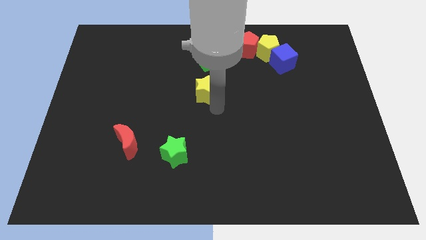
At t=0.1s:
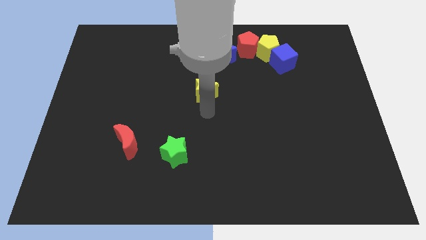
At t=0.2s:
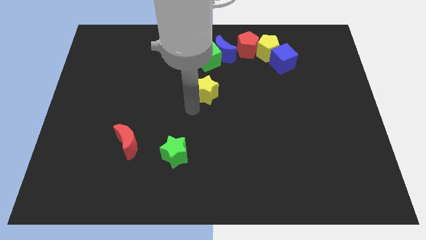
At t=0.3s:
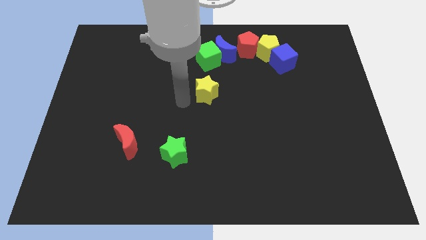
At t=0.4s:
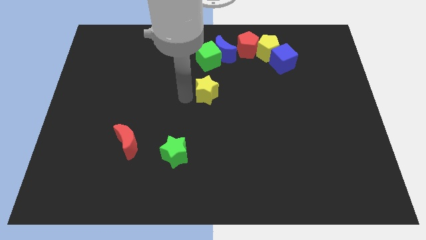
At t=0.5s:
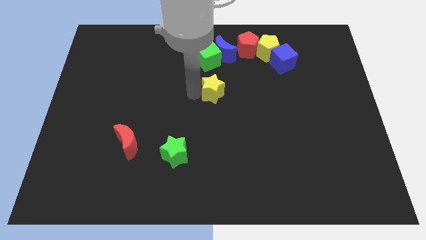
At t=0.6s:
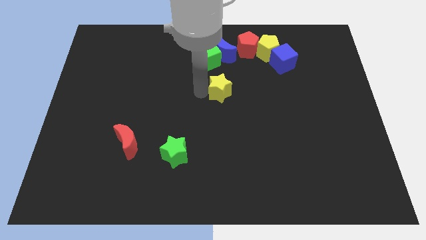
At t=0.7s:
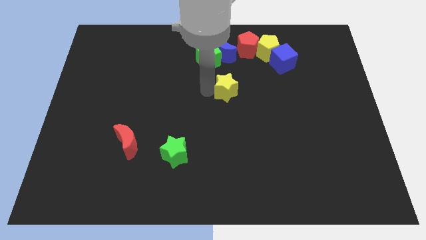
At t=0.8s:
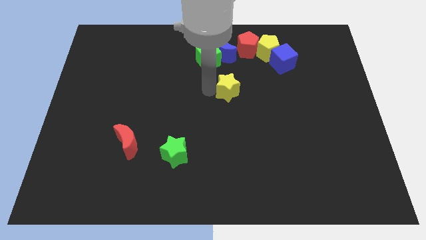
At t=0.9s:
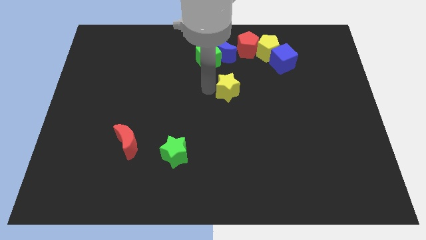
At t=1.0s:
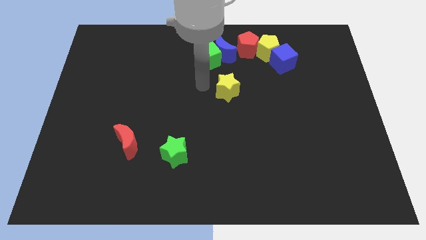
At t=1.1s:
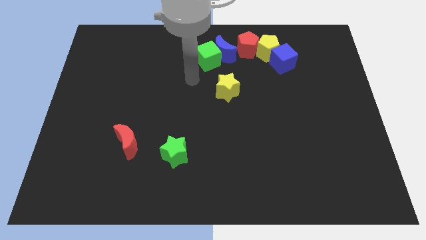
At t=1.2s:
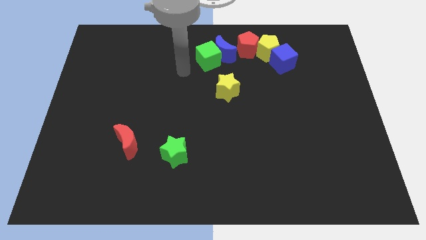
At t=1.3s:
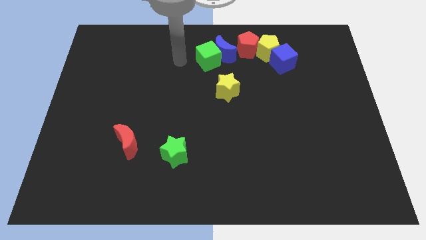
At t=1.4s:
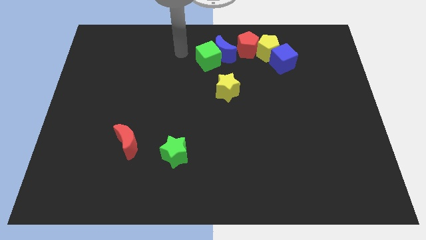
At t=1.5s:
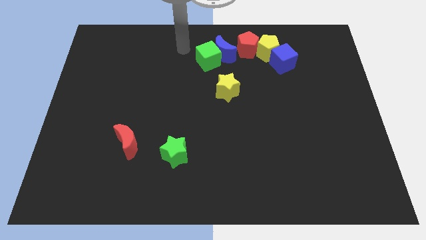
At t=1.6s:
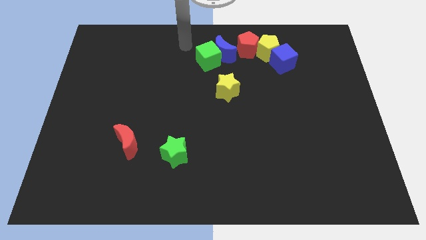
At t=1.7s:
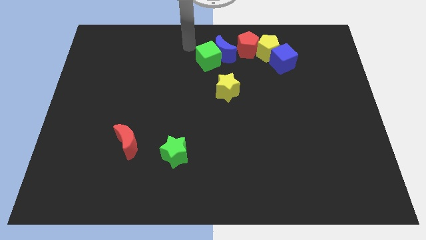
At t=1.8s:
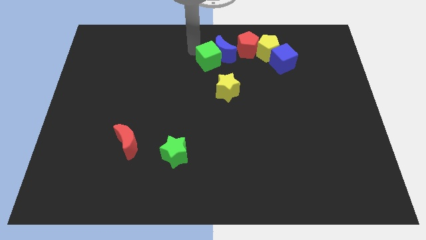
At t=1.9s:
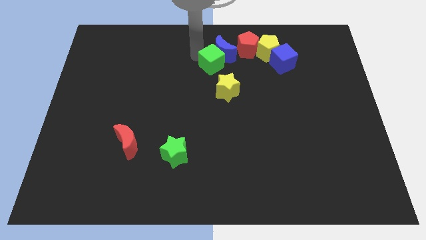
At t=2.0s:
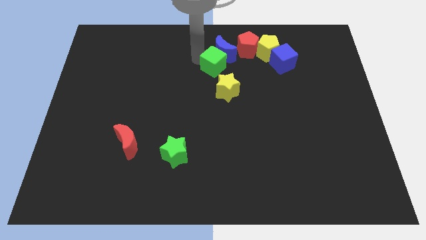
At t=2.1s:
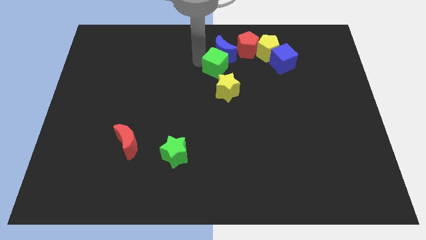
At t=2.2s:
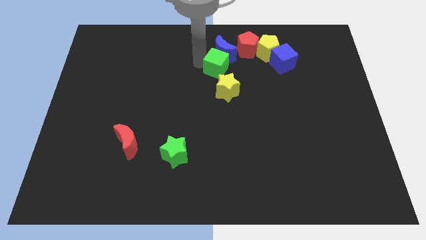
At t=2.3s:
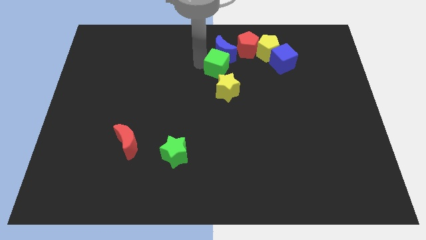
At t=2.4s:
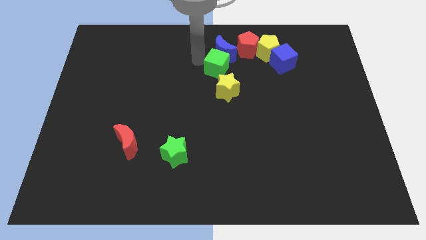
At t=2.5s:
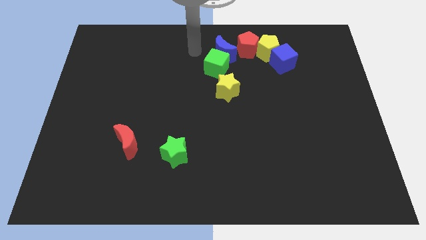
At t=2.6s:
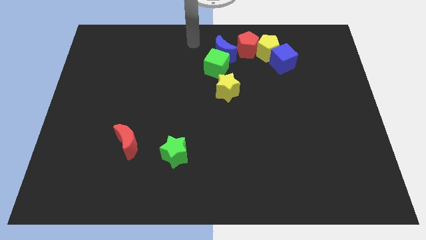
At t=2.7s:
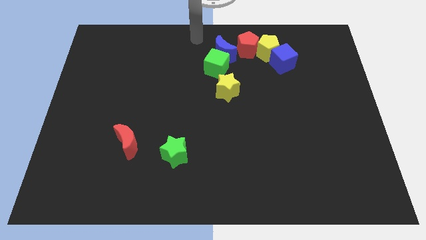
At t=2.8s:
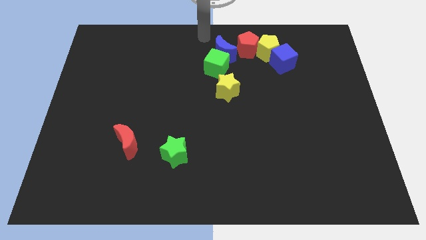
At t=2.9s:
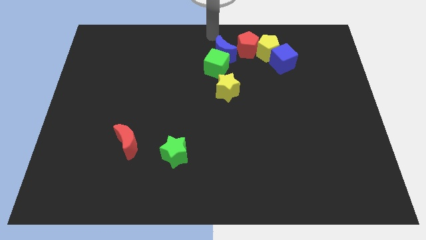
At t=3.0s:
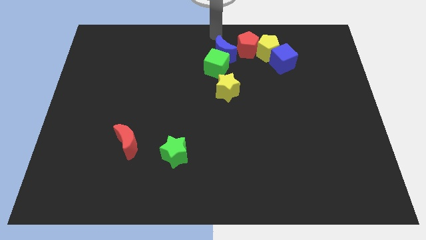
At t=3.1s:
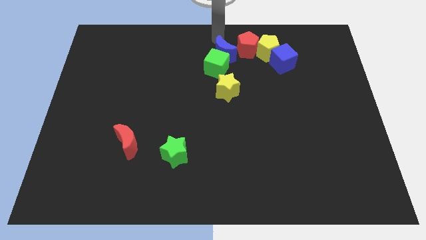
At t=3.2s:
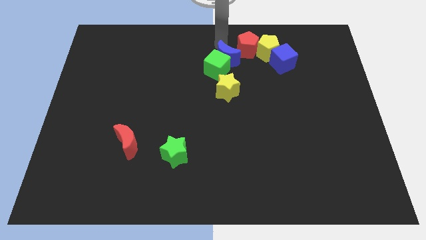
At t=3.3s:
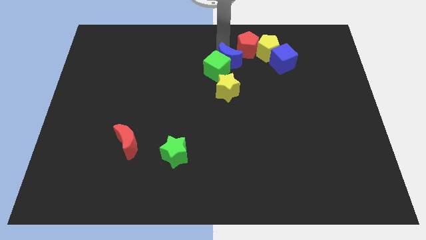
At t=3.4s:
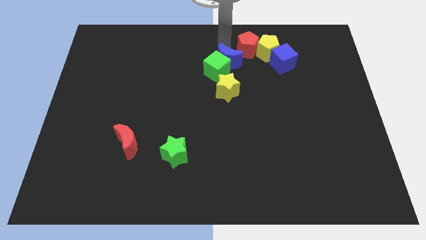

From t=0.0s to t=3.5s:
attach the green cube to the yellow star

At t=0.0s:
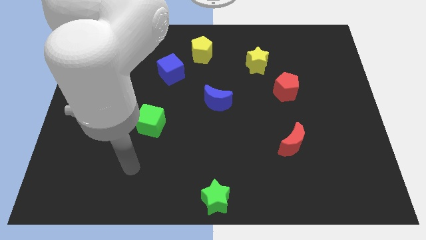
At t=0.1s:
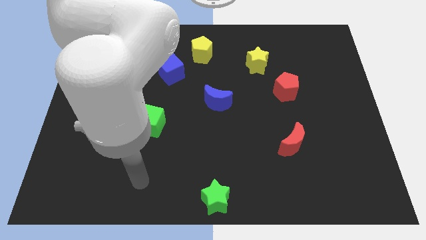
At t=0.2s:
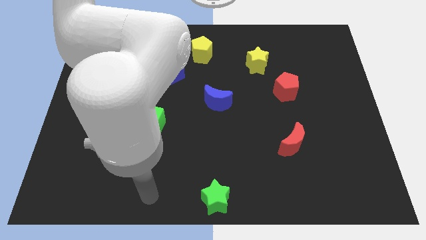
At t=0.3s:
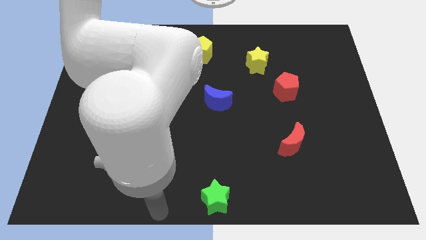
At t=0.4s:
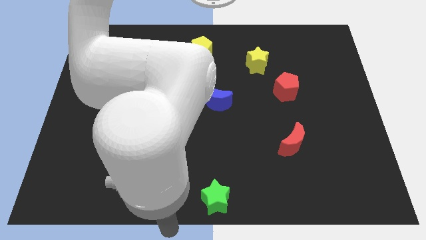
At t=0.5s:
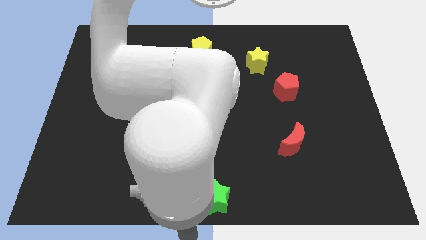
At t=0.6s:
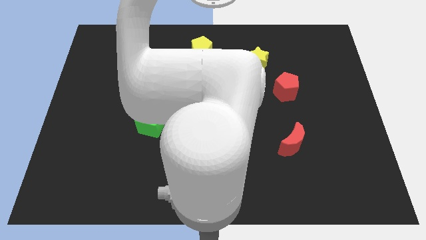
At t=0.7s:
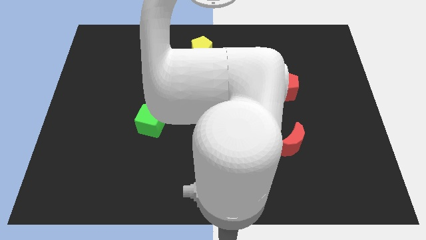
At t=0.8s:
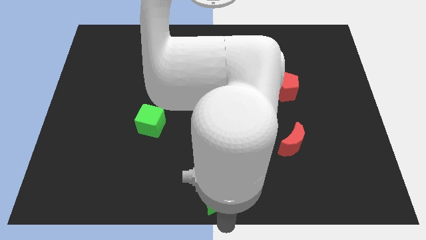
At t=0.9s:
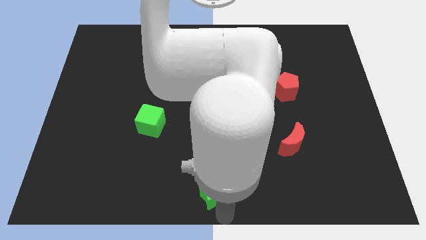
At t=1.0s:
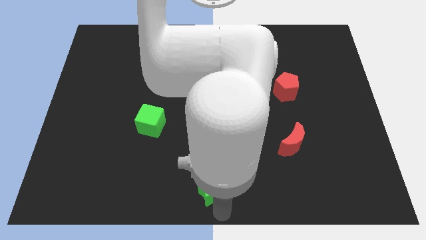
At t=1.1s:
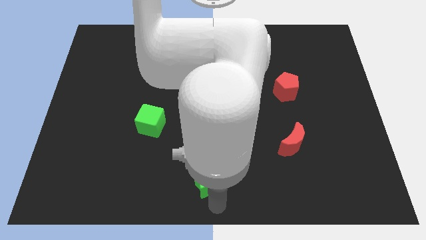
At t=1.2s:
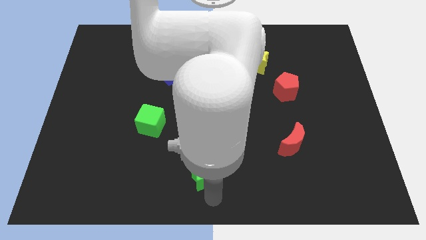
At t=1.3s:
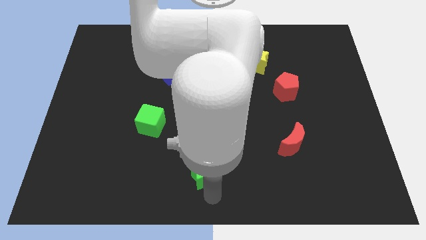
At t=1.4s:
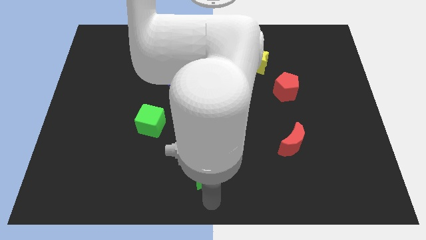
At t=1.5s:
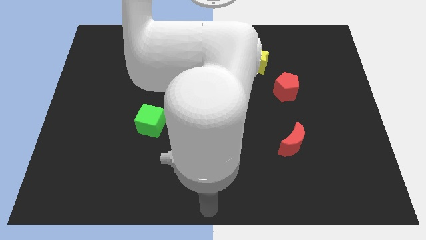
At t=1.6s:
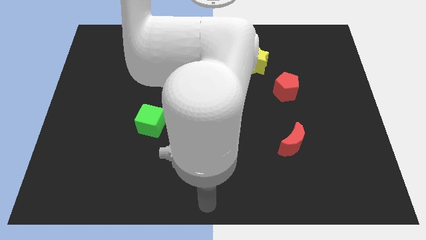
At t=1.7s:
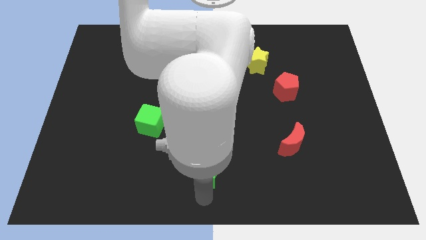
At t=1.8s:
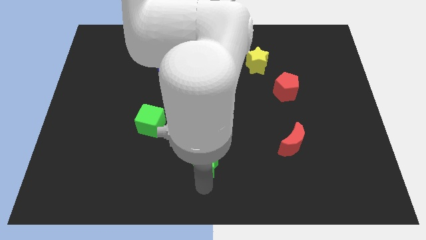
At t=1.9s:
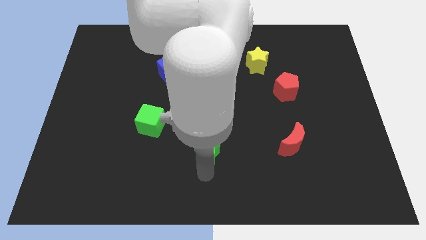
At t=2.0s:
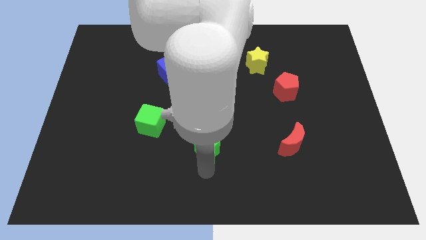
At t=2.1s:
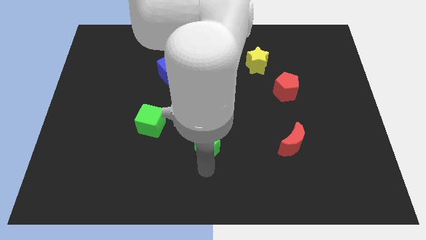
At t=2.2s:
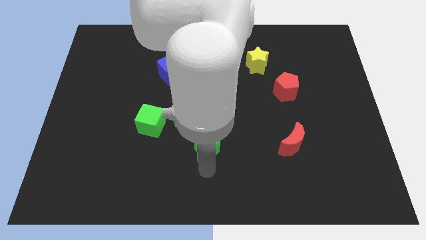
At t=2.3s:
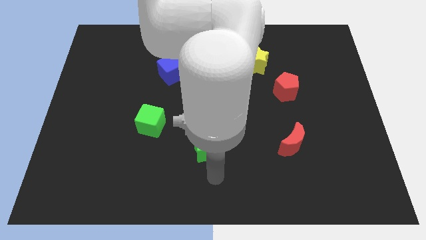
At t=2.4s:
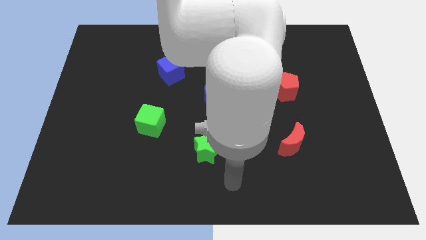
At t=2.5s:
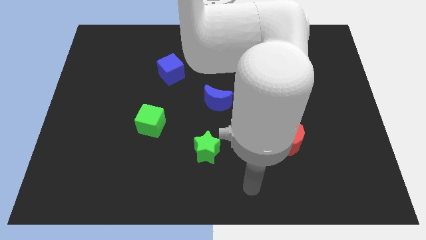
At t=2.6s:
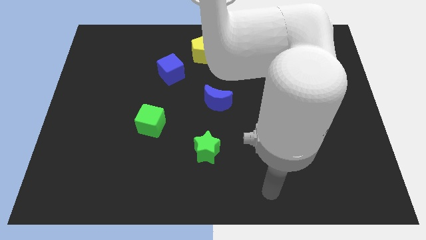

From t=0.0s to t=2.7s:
slightly move the green star towards the top

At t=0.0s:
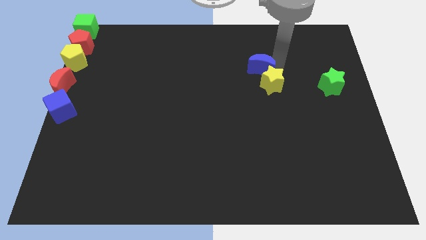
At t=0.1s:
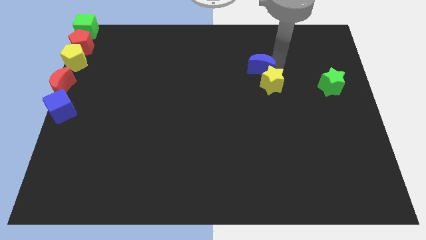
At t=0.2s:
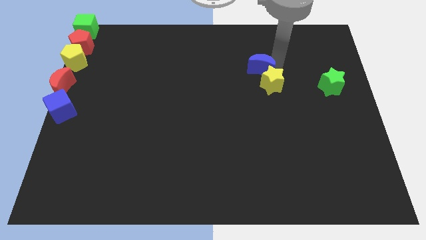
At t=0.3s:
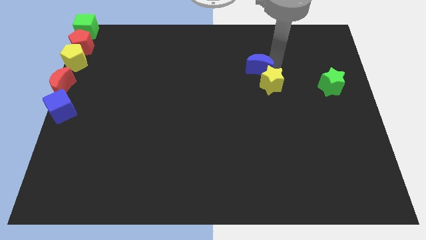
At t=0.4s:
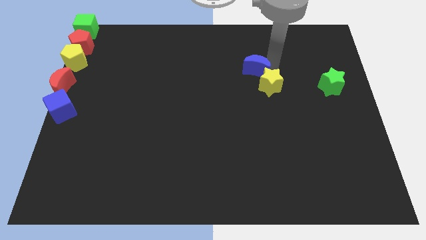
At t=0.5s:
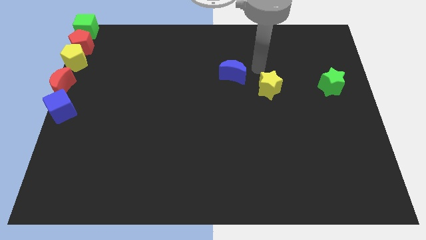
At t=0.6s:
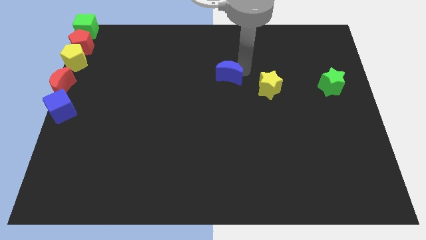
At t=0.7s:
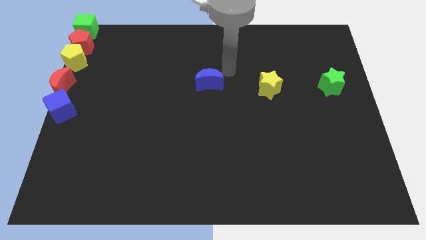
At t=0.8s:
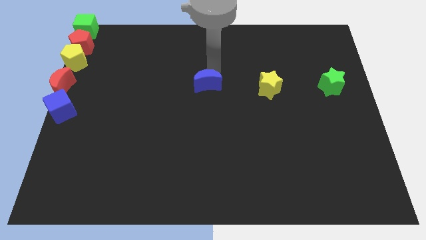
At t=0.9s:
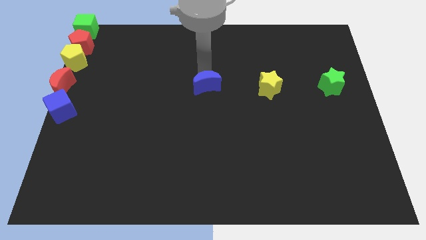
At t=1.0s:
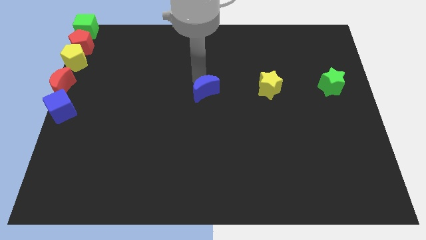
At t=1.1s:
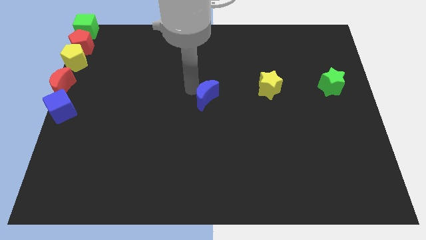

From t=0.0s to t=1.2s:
place the blue moon parallel to the left of yellow star

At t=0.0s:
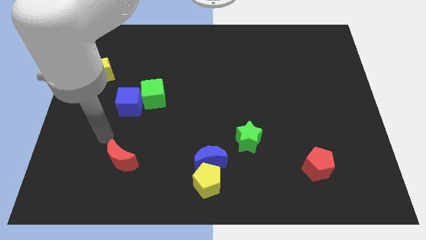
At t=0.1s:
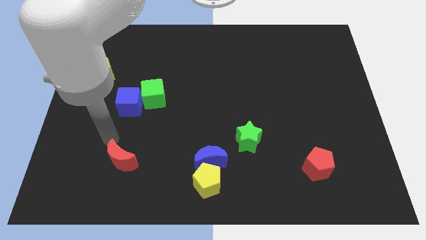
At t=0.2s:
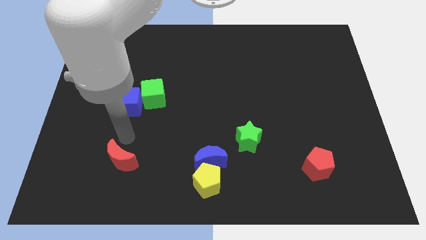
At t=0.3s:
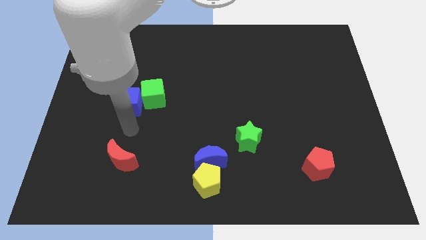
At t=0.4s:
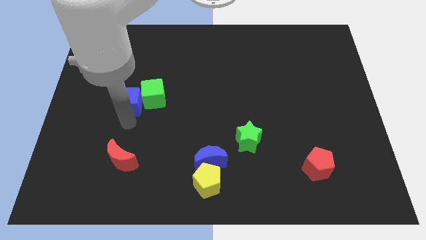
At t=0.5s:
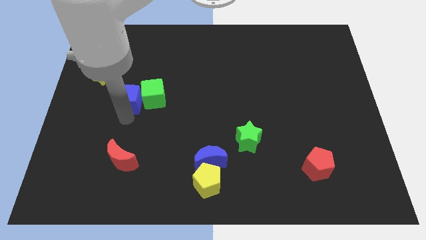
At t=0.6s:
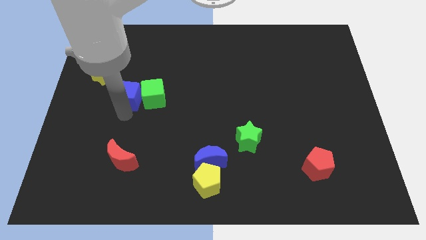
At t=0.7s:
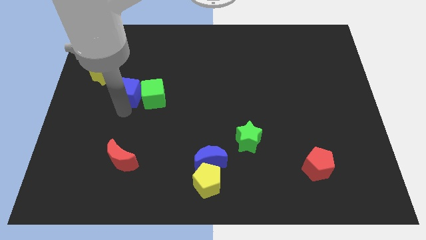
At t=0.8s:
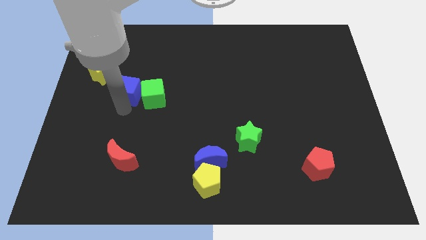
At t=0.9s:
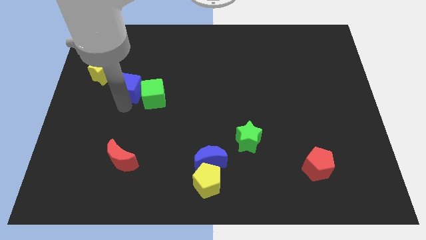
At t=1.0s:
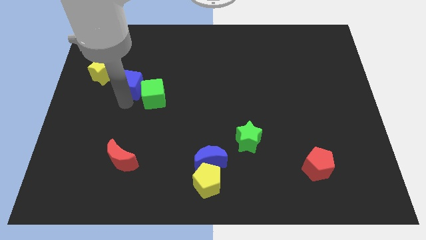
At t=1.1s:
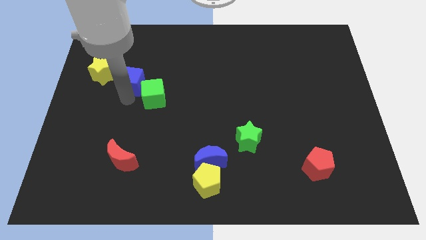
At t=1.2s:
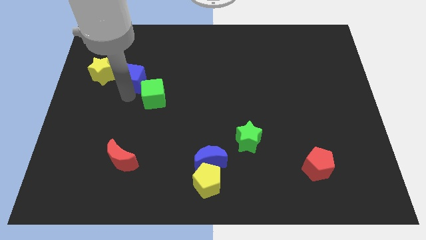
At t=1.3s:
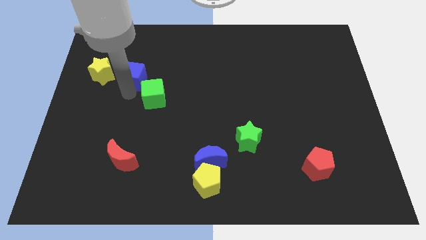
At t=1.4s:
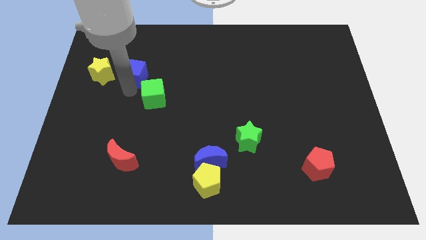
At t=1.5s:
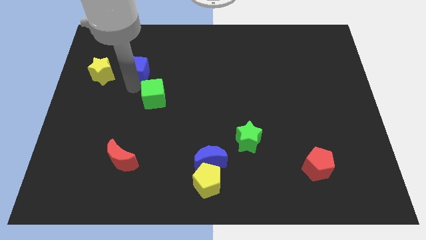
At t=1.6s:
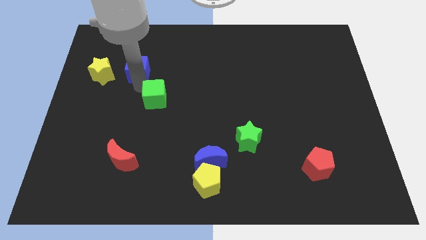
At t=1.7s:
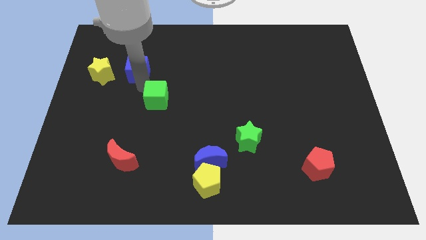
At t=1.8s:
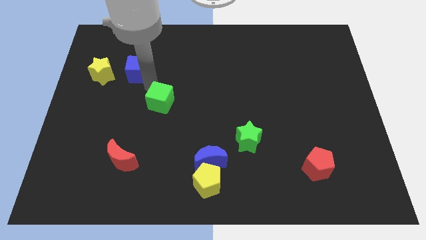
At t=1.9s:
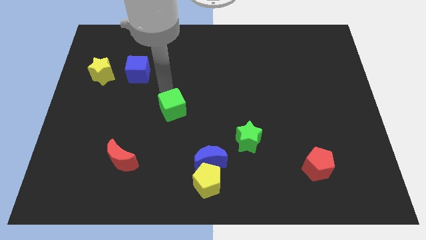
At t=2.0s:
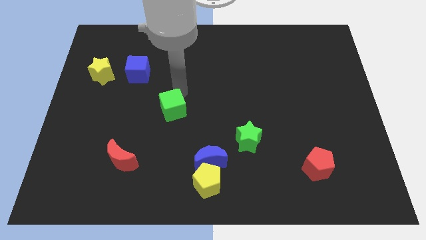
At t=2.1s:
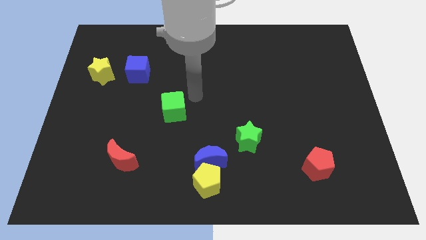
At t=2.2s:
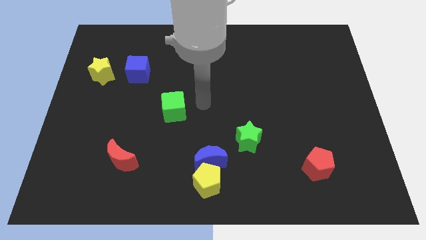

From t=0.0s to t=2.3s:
move the green cube to the center
